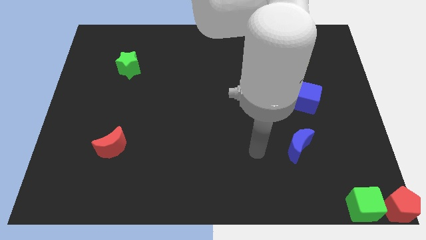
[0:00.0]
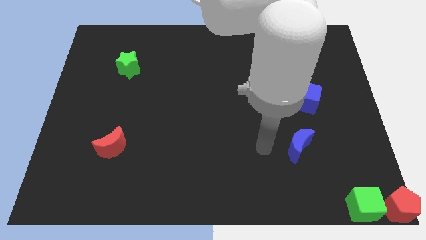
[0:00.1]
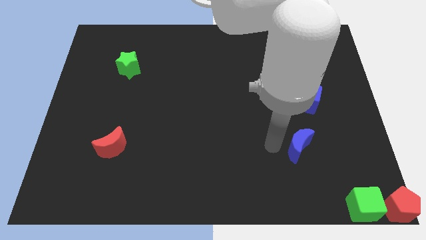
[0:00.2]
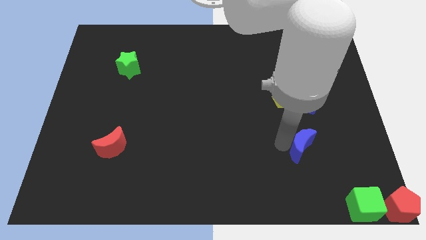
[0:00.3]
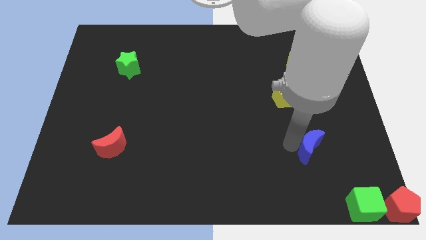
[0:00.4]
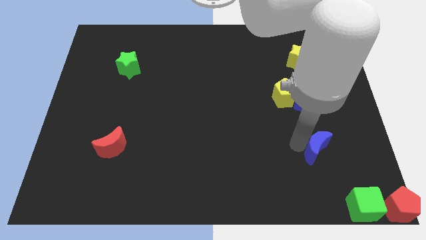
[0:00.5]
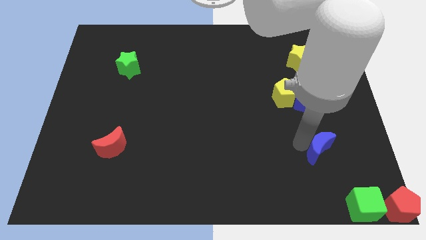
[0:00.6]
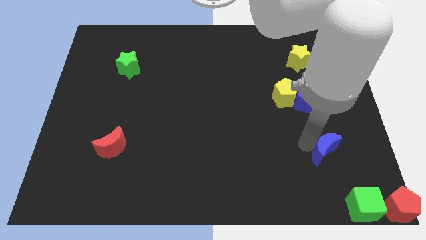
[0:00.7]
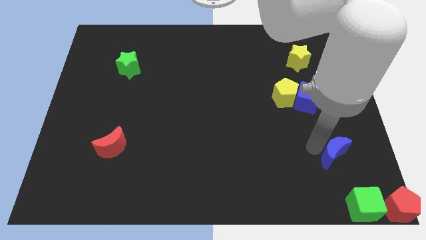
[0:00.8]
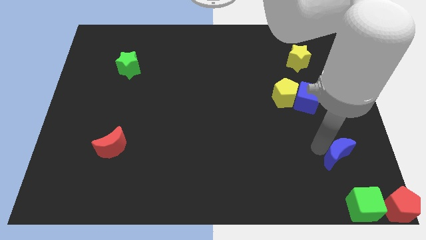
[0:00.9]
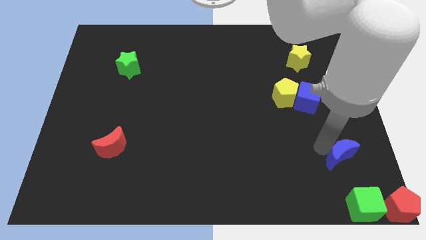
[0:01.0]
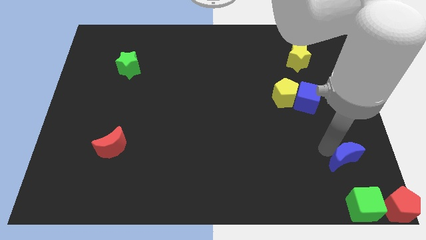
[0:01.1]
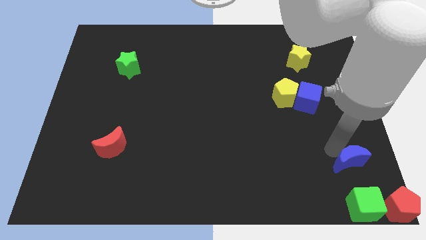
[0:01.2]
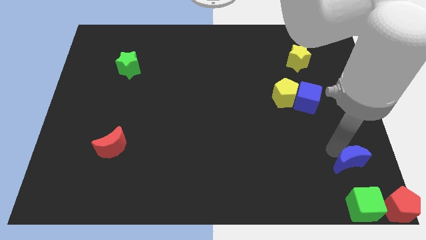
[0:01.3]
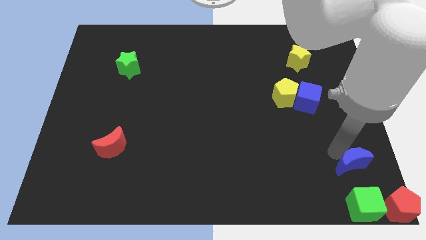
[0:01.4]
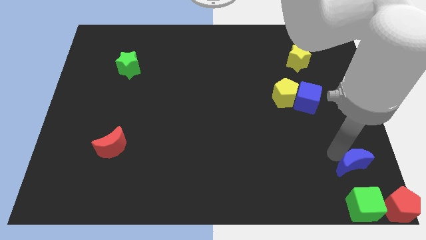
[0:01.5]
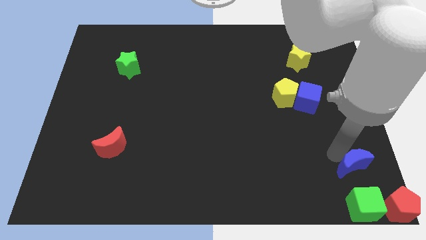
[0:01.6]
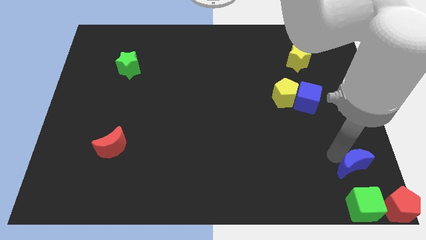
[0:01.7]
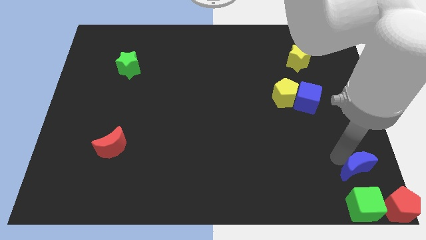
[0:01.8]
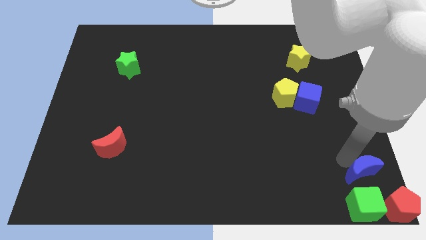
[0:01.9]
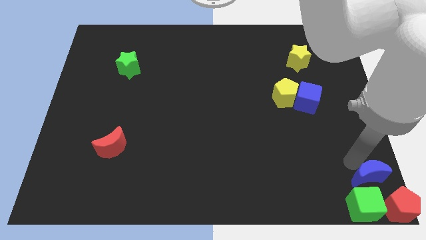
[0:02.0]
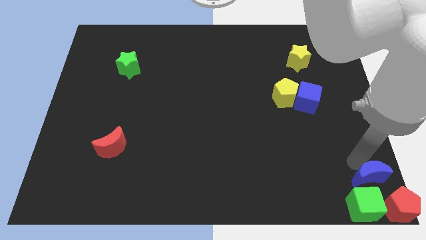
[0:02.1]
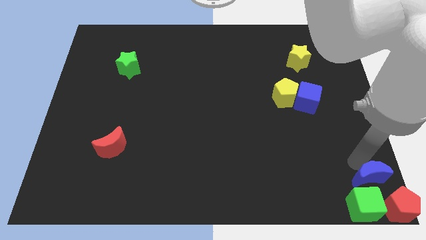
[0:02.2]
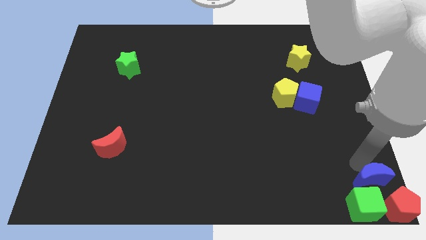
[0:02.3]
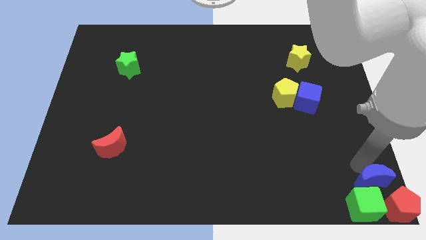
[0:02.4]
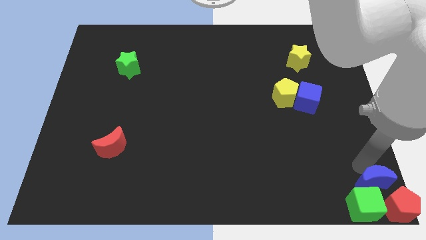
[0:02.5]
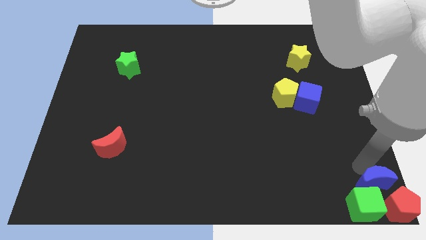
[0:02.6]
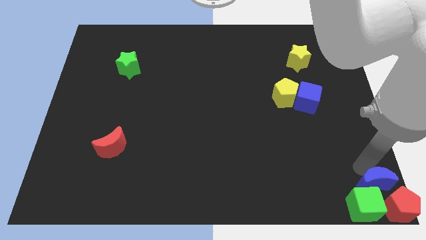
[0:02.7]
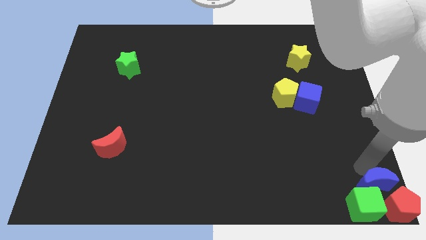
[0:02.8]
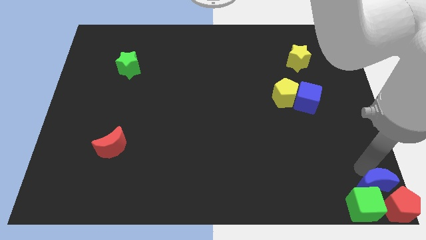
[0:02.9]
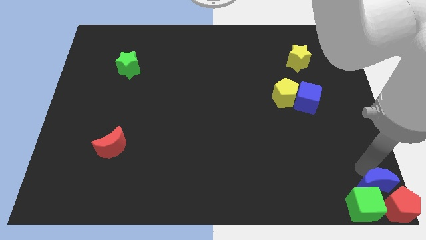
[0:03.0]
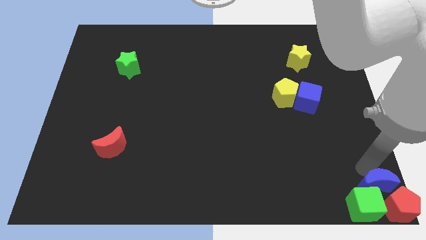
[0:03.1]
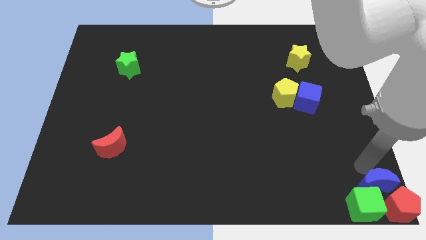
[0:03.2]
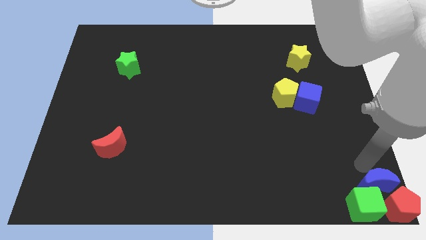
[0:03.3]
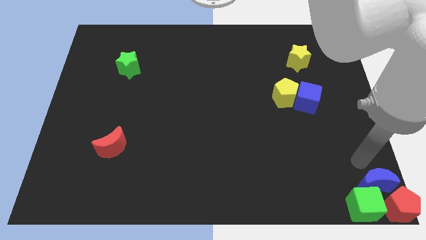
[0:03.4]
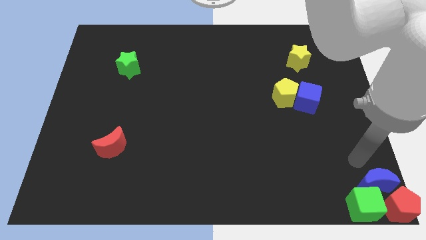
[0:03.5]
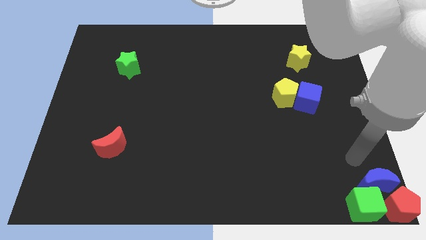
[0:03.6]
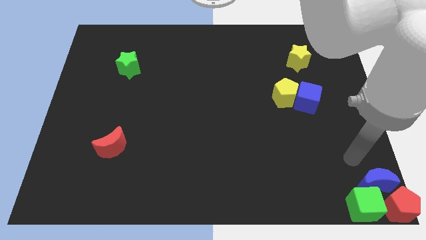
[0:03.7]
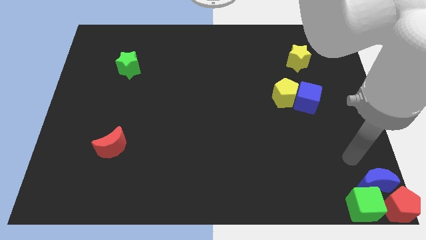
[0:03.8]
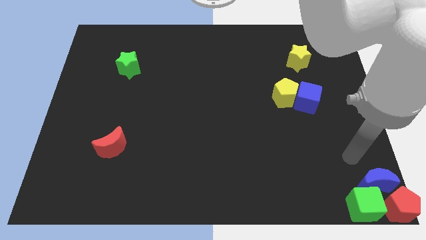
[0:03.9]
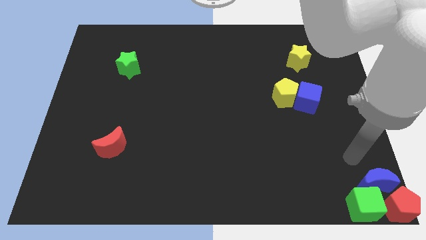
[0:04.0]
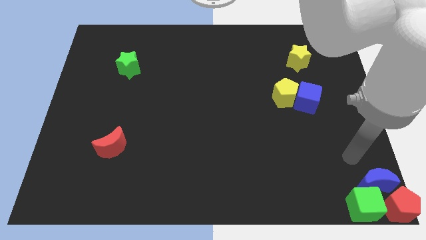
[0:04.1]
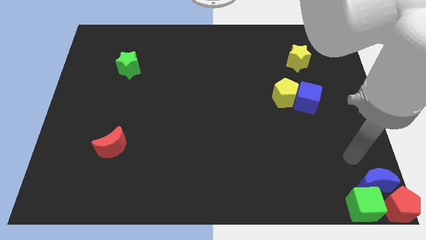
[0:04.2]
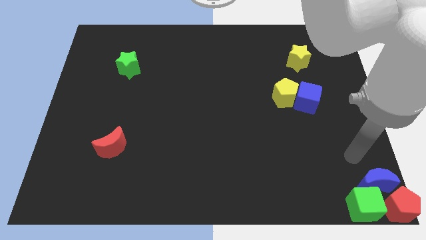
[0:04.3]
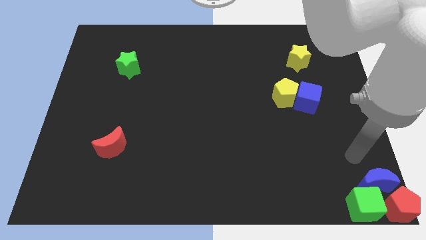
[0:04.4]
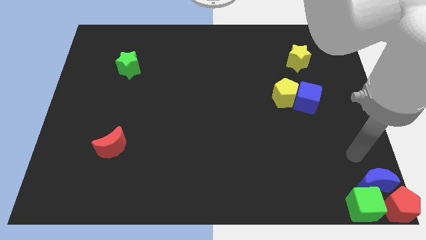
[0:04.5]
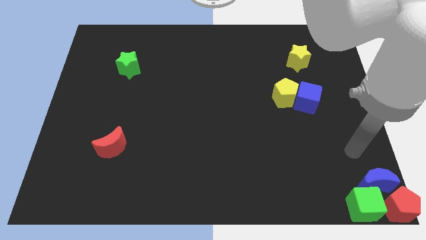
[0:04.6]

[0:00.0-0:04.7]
place blue moon above red pentagon and green cube

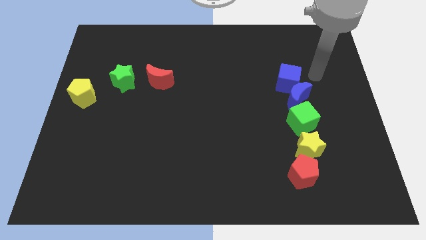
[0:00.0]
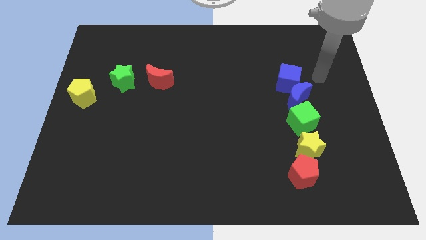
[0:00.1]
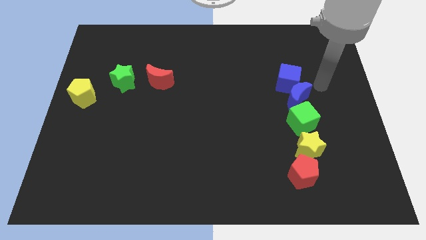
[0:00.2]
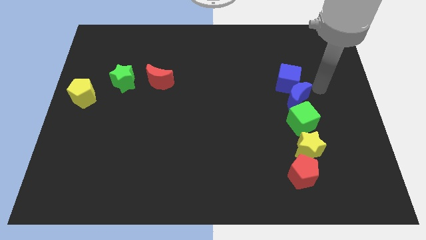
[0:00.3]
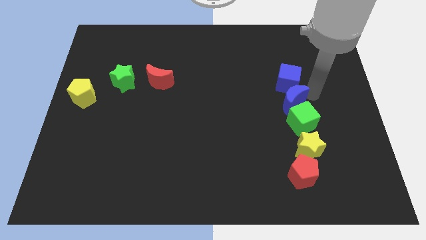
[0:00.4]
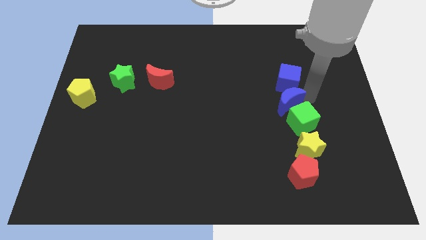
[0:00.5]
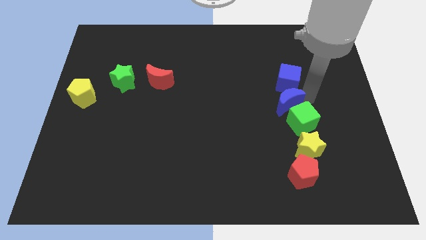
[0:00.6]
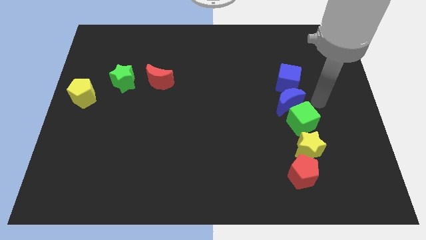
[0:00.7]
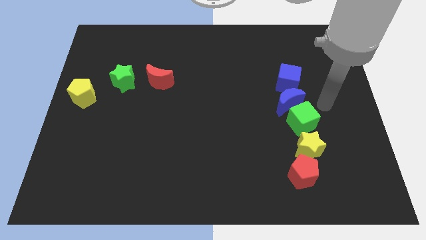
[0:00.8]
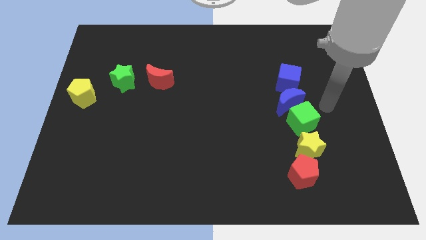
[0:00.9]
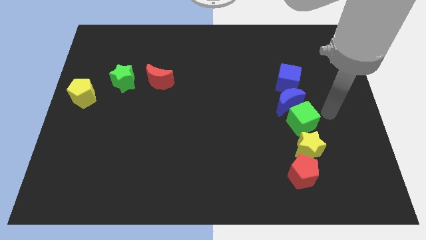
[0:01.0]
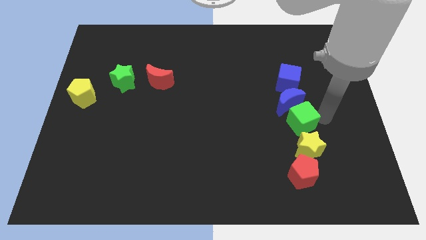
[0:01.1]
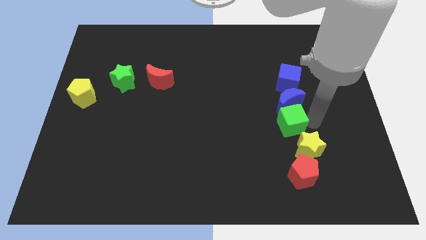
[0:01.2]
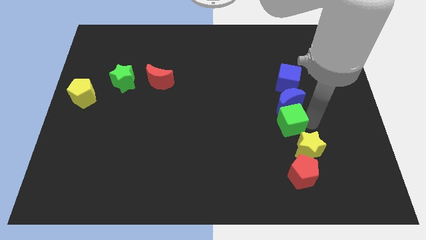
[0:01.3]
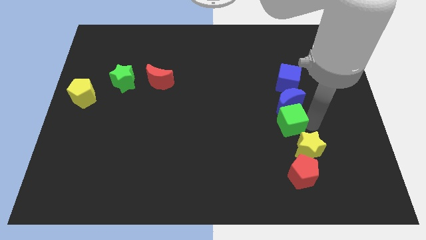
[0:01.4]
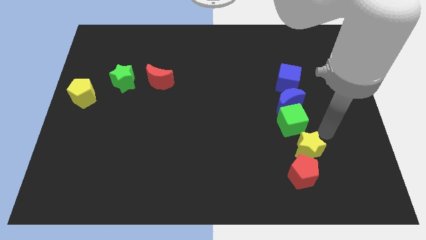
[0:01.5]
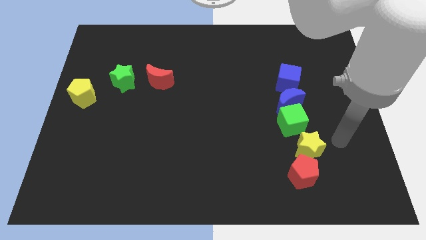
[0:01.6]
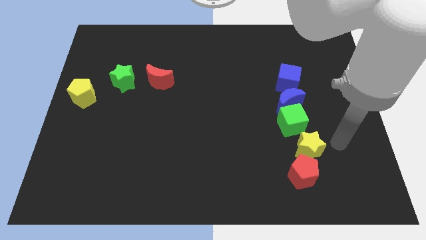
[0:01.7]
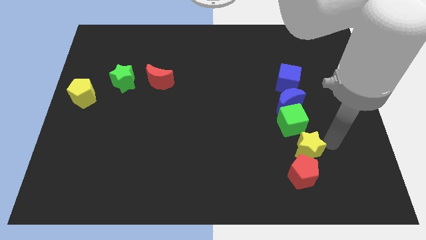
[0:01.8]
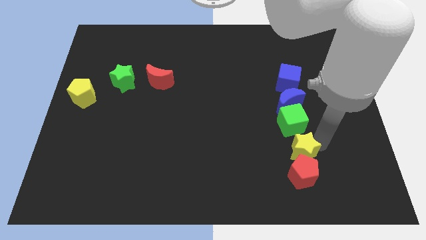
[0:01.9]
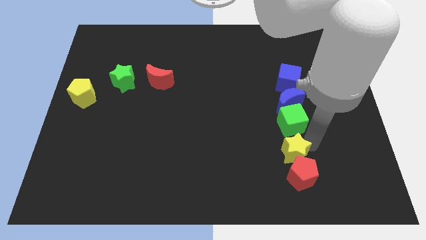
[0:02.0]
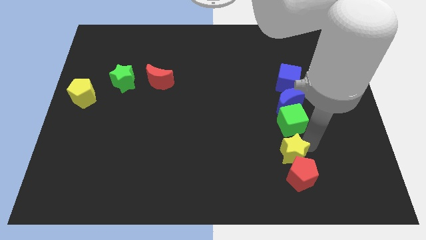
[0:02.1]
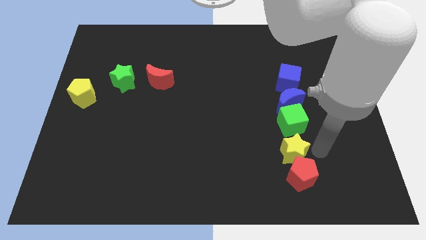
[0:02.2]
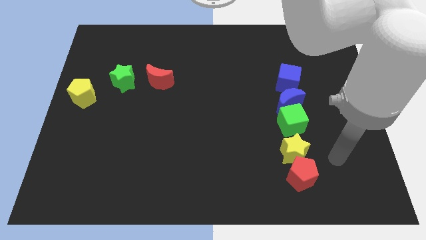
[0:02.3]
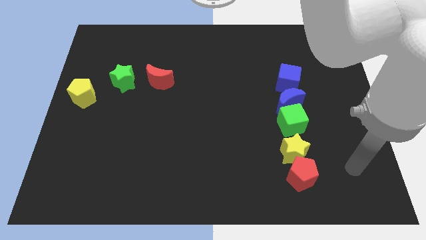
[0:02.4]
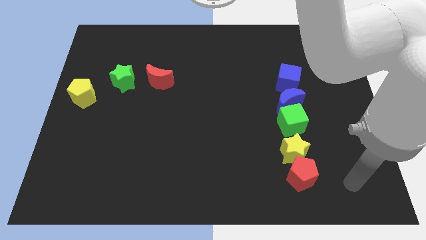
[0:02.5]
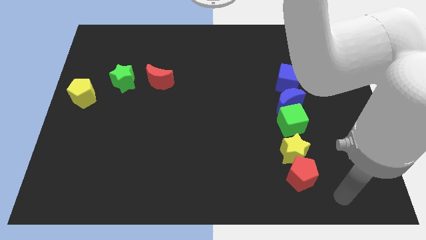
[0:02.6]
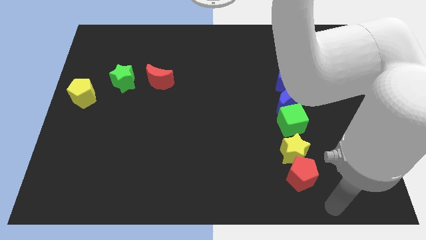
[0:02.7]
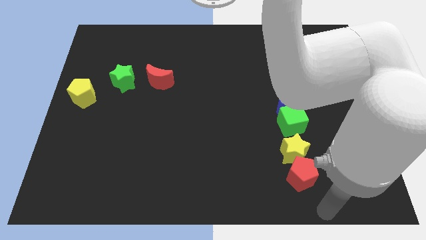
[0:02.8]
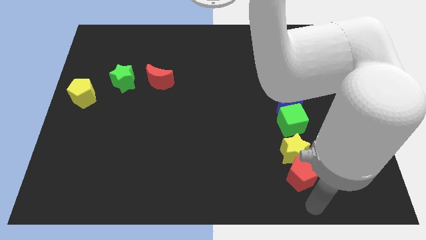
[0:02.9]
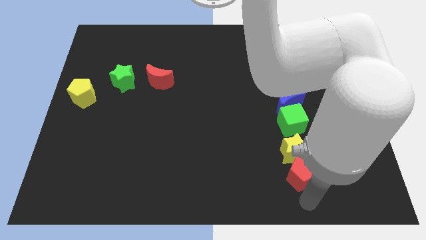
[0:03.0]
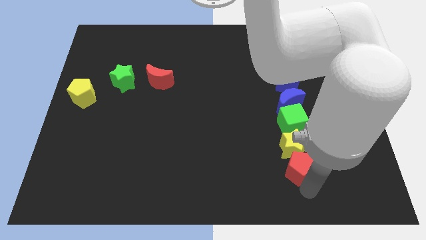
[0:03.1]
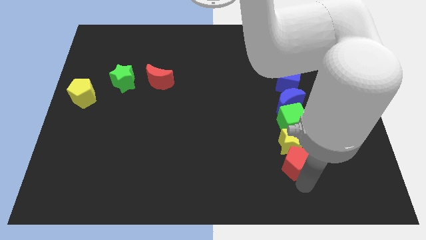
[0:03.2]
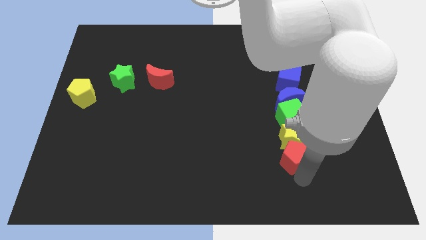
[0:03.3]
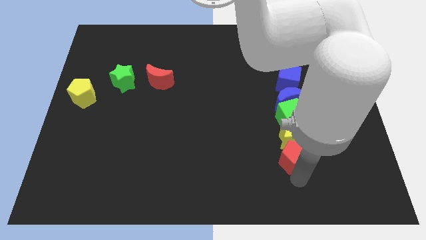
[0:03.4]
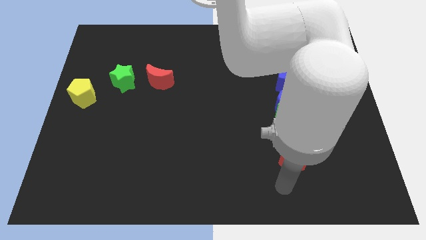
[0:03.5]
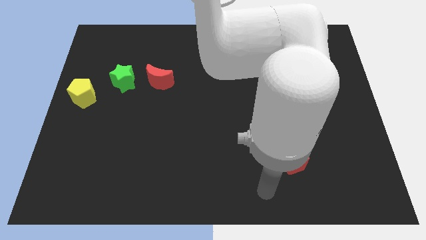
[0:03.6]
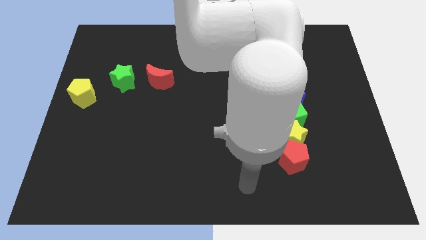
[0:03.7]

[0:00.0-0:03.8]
adjust all the vertical line of blocks

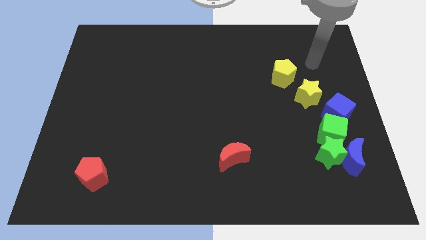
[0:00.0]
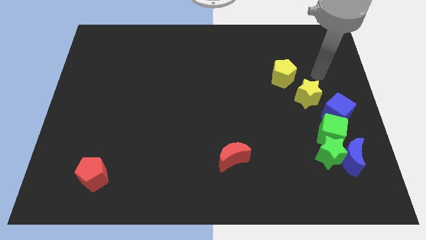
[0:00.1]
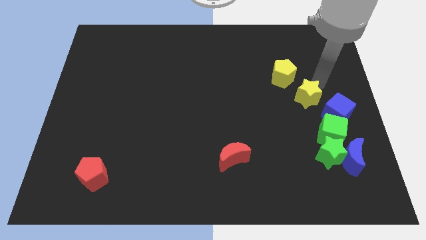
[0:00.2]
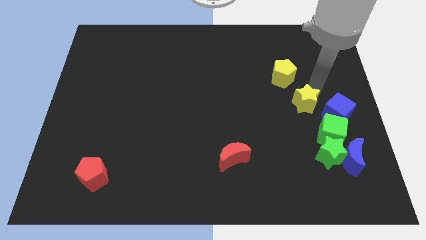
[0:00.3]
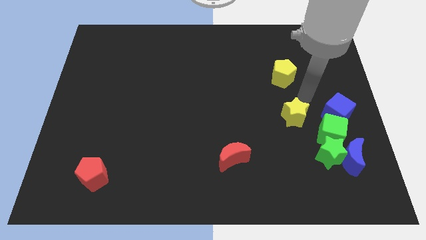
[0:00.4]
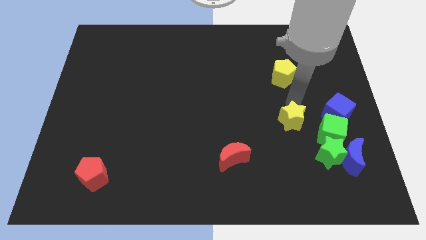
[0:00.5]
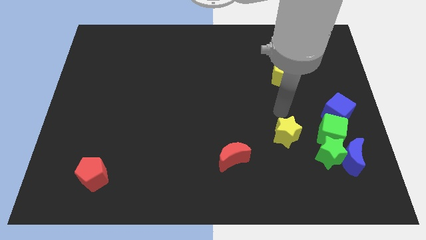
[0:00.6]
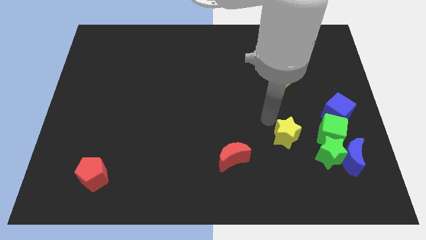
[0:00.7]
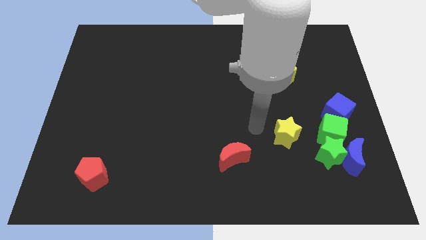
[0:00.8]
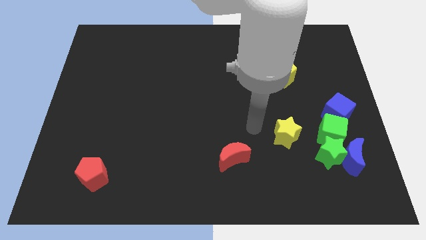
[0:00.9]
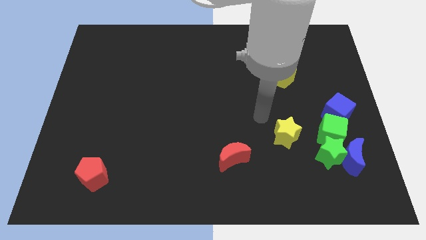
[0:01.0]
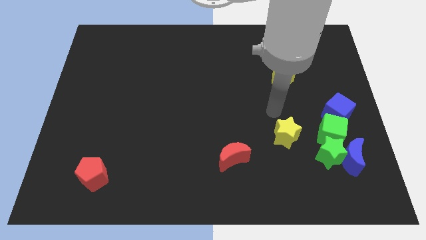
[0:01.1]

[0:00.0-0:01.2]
push the yellow star diagonally in between the green star and red moon
